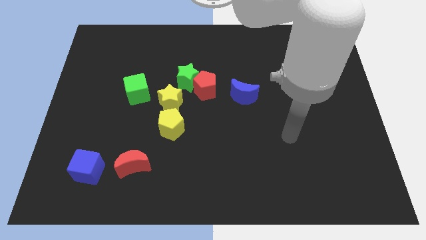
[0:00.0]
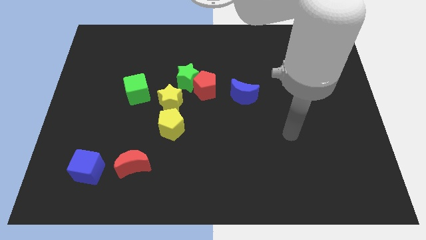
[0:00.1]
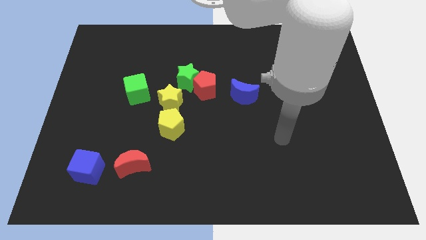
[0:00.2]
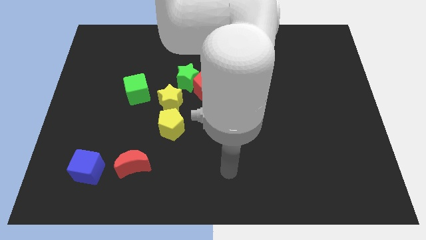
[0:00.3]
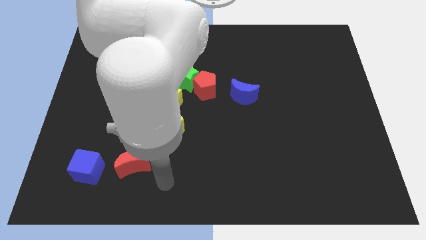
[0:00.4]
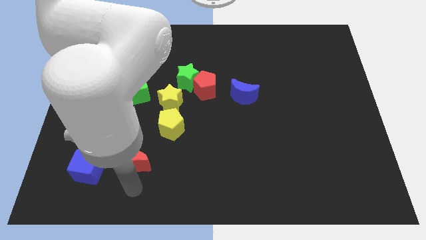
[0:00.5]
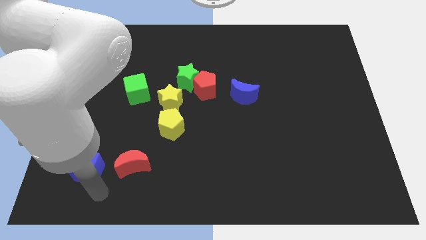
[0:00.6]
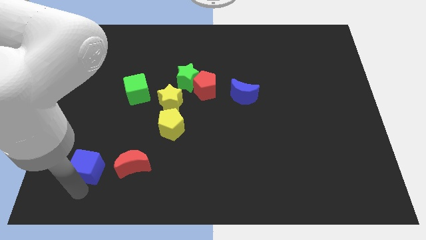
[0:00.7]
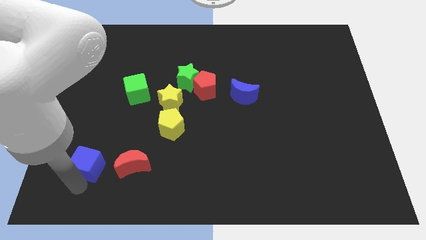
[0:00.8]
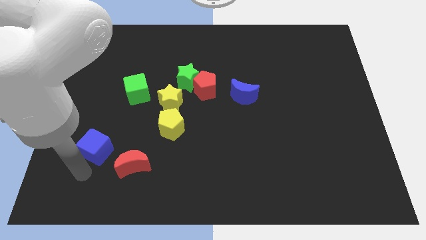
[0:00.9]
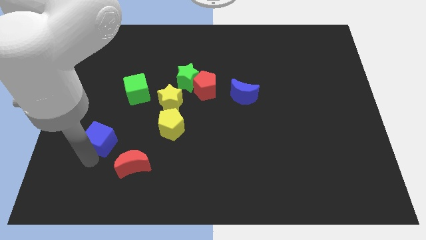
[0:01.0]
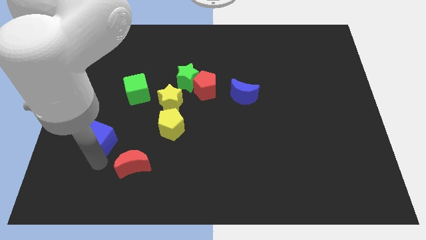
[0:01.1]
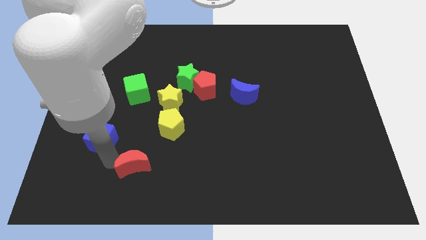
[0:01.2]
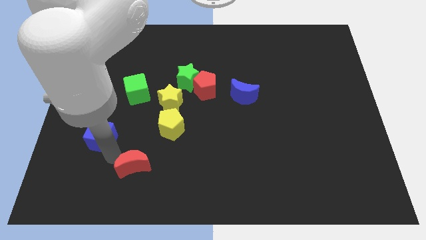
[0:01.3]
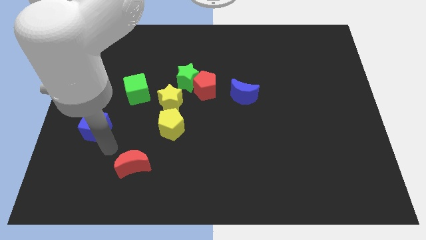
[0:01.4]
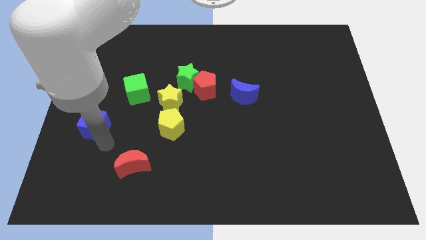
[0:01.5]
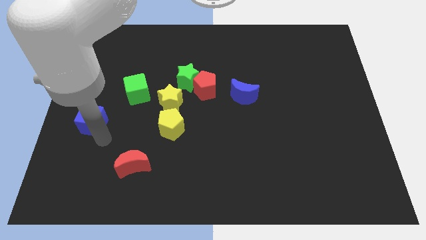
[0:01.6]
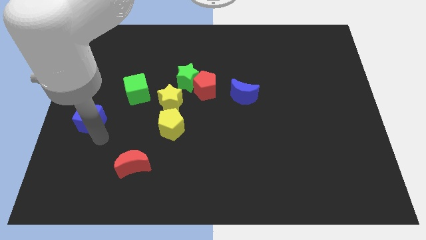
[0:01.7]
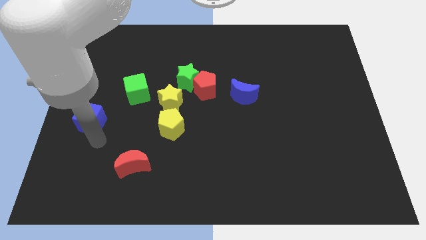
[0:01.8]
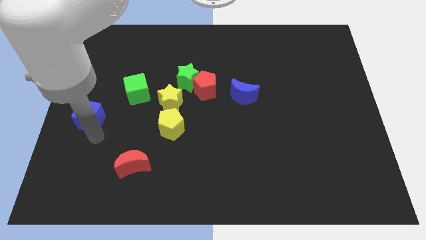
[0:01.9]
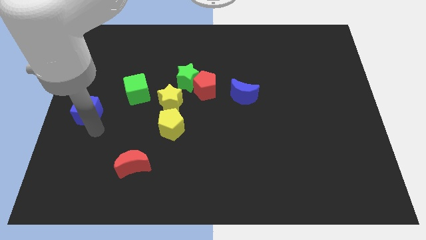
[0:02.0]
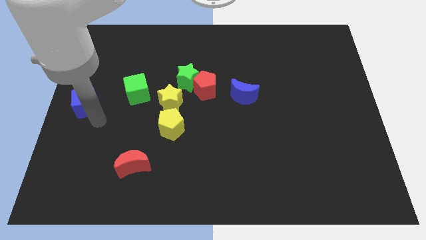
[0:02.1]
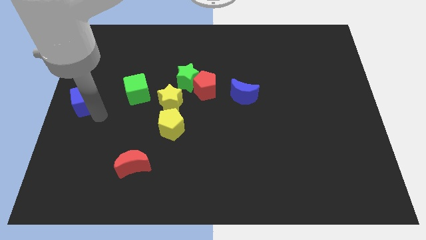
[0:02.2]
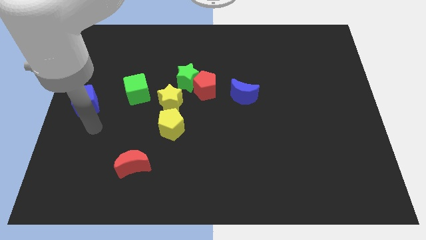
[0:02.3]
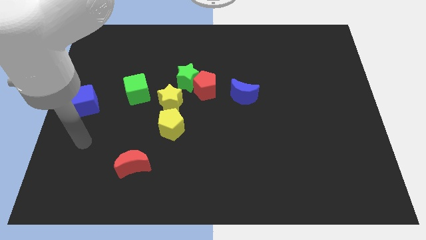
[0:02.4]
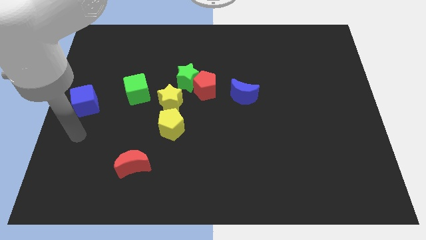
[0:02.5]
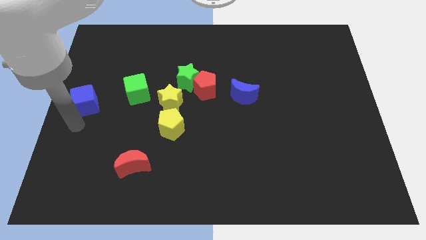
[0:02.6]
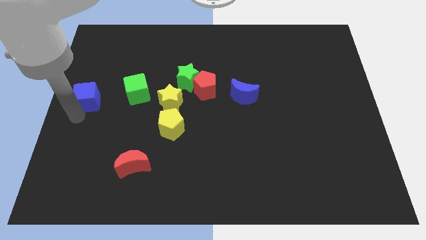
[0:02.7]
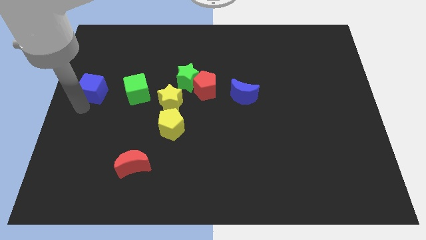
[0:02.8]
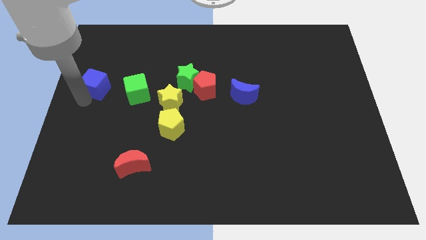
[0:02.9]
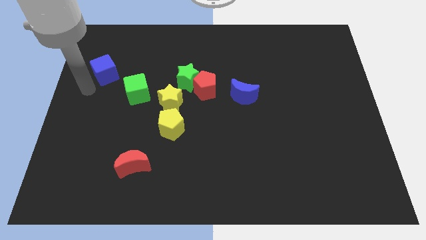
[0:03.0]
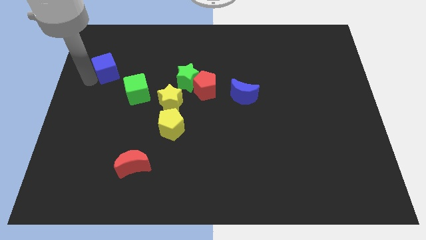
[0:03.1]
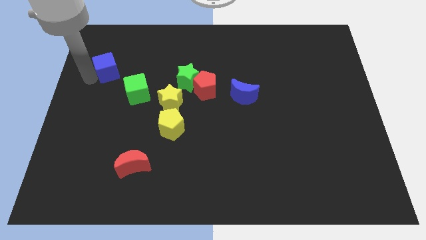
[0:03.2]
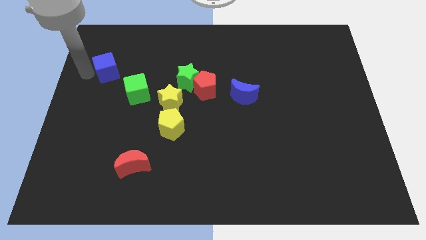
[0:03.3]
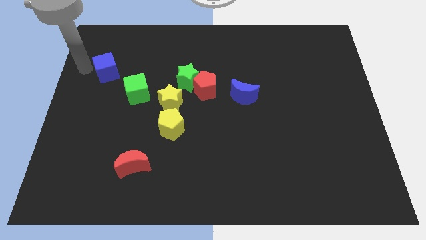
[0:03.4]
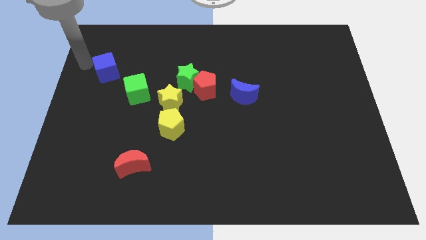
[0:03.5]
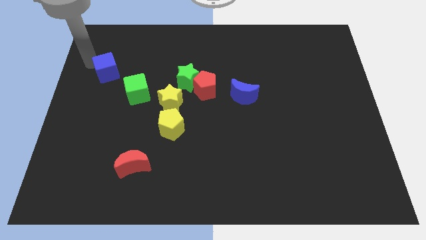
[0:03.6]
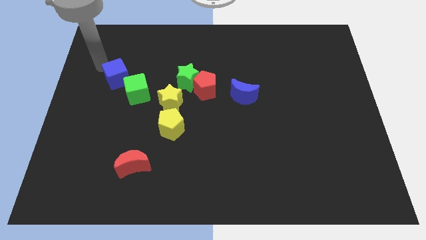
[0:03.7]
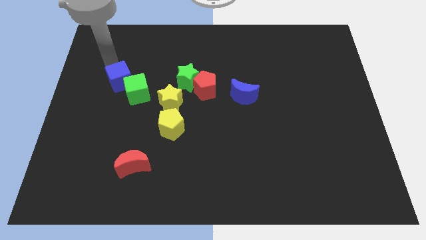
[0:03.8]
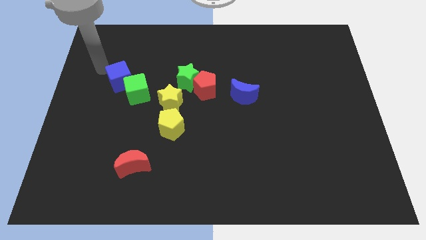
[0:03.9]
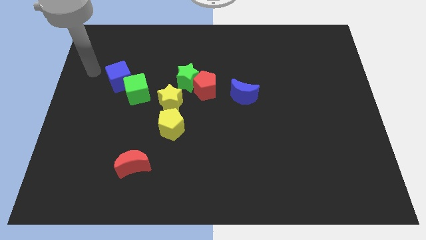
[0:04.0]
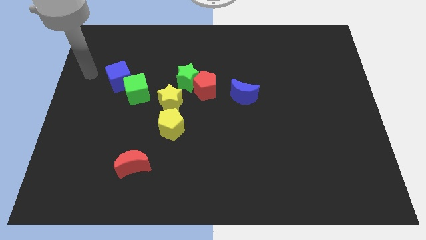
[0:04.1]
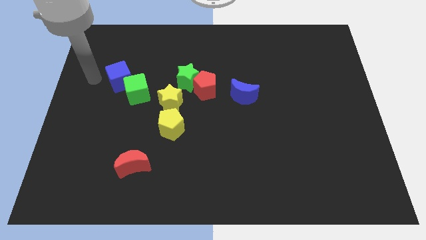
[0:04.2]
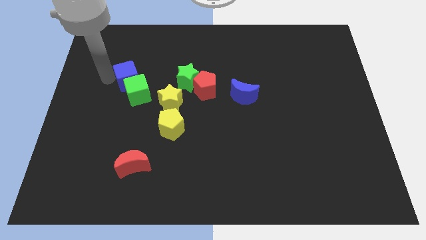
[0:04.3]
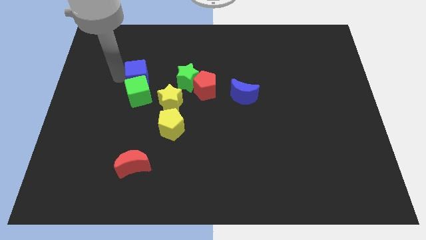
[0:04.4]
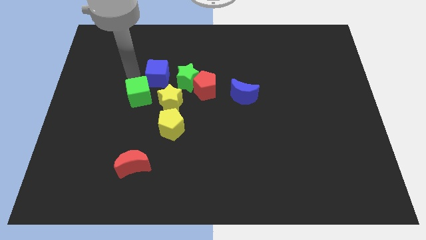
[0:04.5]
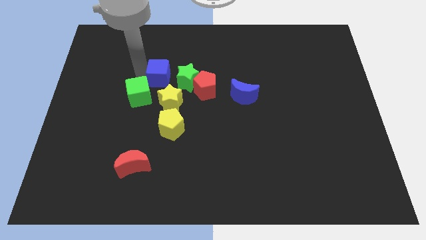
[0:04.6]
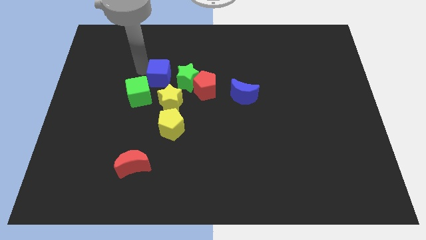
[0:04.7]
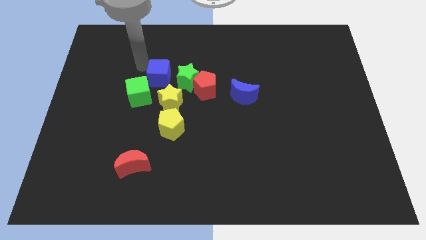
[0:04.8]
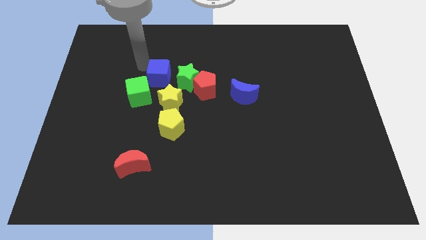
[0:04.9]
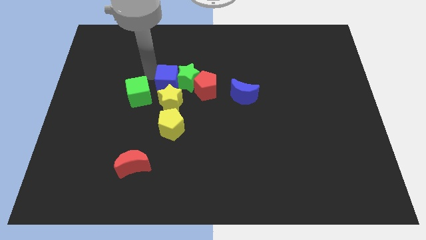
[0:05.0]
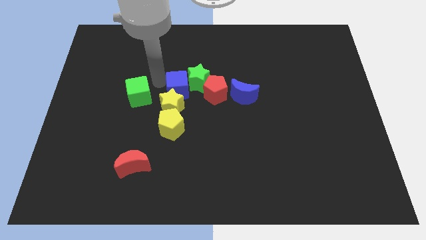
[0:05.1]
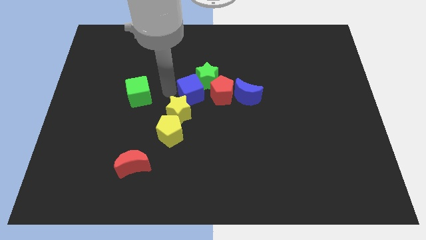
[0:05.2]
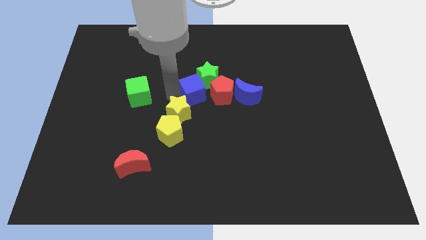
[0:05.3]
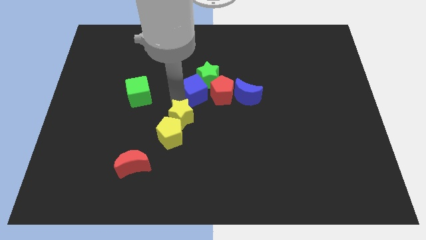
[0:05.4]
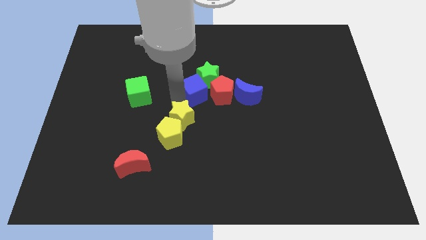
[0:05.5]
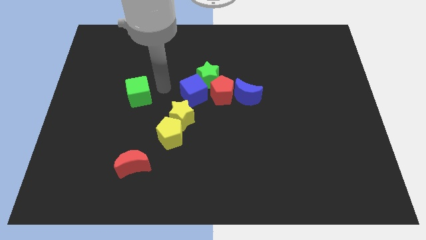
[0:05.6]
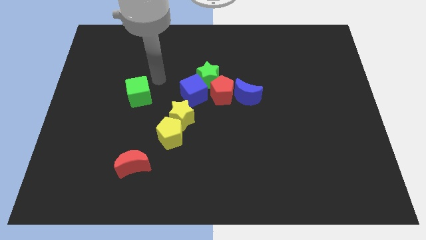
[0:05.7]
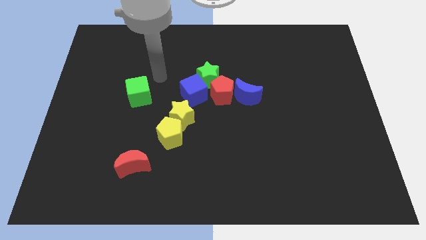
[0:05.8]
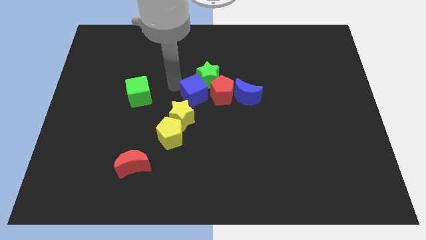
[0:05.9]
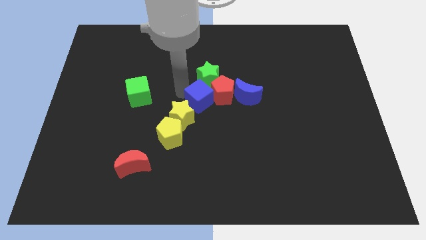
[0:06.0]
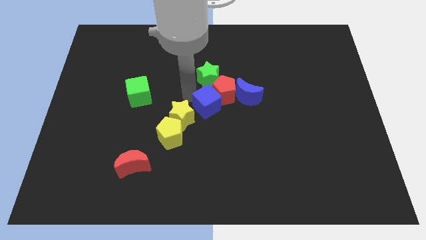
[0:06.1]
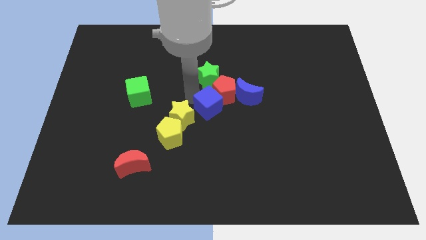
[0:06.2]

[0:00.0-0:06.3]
move the blue cube towards the red pentagon

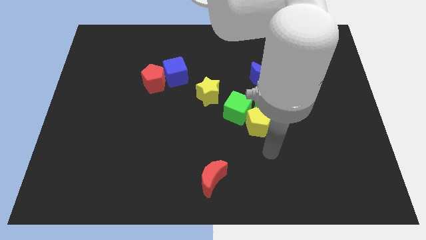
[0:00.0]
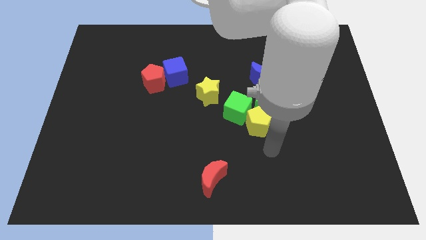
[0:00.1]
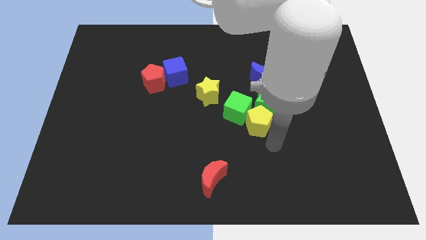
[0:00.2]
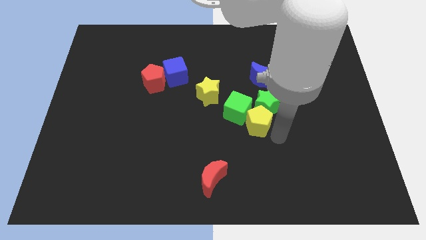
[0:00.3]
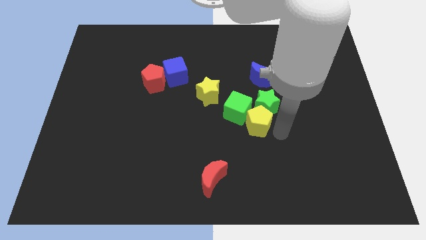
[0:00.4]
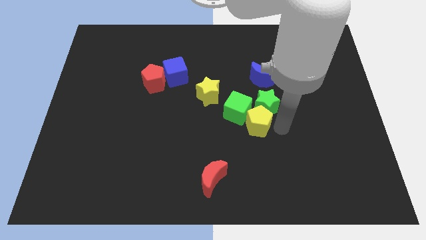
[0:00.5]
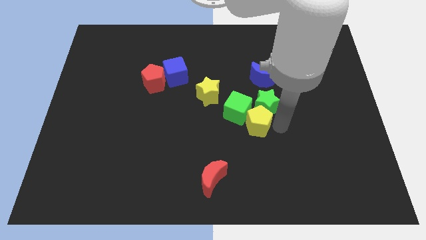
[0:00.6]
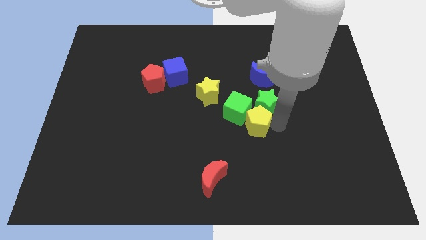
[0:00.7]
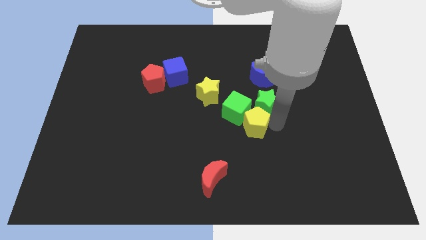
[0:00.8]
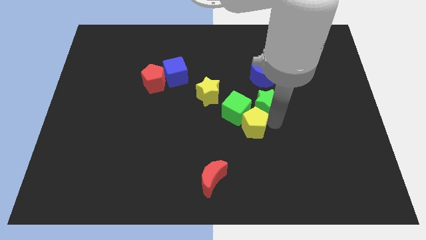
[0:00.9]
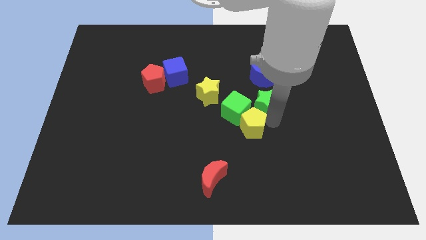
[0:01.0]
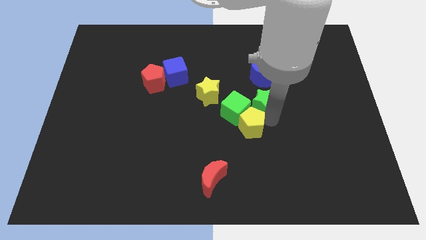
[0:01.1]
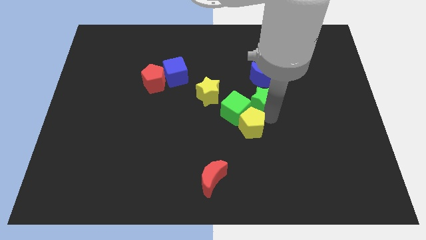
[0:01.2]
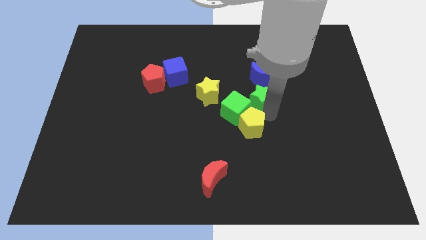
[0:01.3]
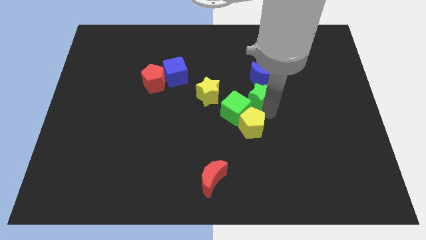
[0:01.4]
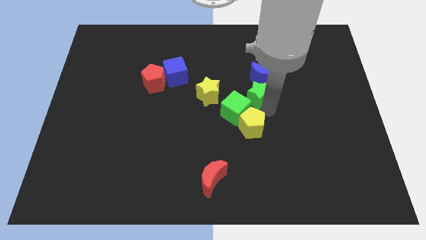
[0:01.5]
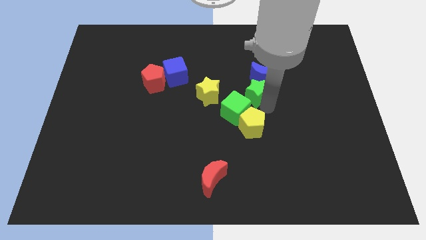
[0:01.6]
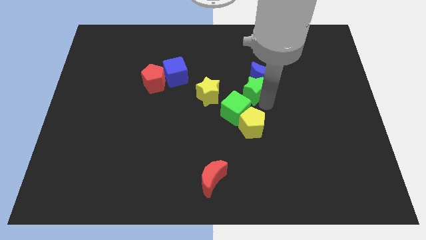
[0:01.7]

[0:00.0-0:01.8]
put the green star towards the blue moon

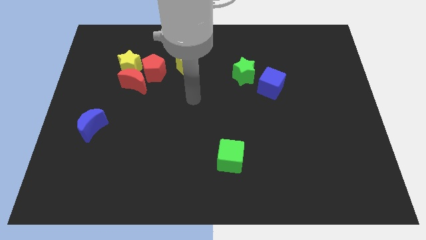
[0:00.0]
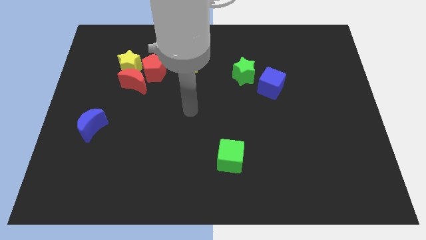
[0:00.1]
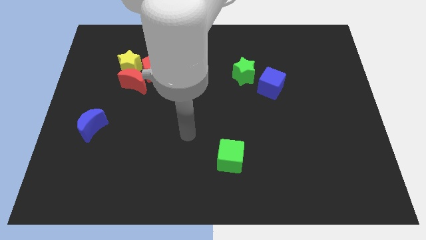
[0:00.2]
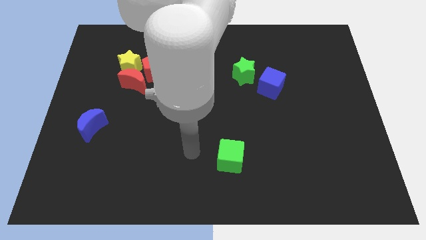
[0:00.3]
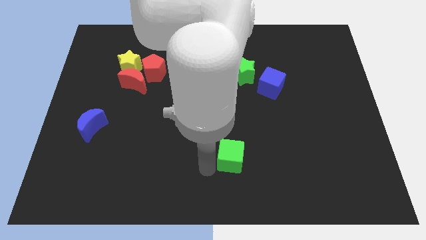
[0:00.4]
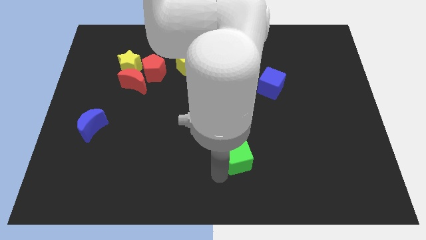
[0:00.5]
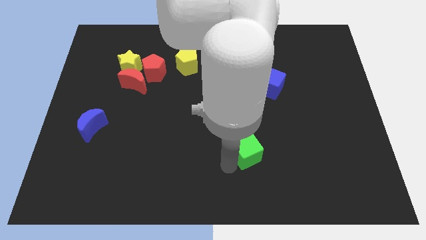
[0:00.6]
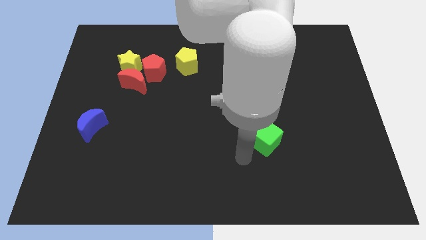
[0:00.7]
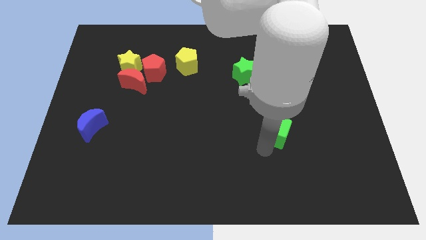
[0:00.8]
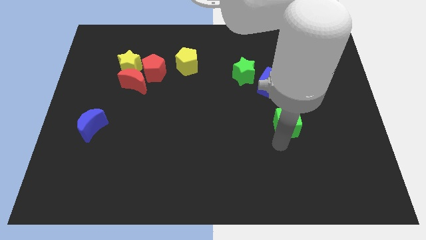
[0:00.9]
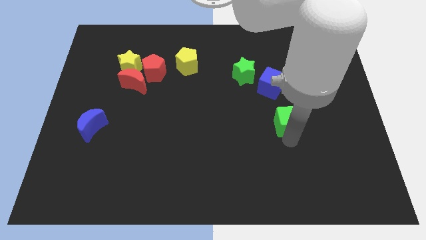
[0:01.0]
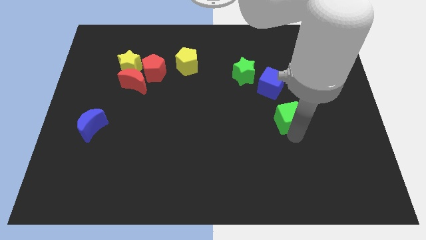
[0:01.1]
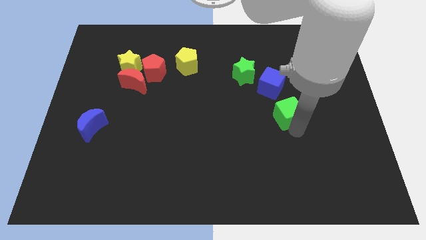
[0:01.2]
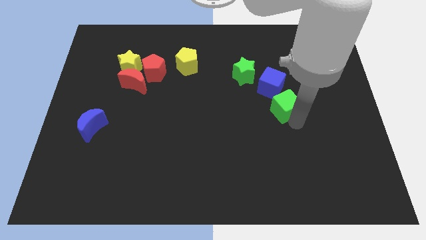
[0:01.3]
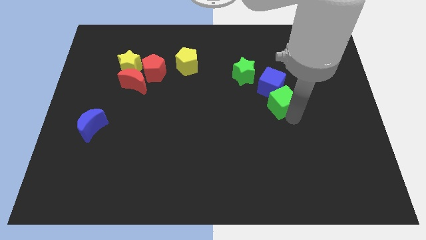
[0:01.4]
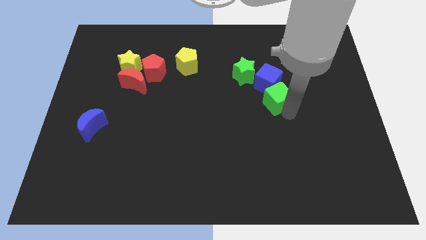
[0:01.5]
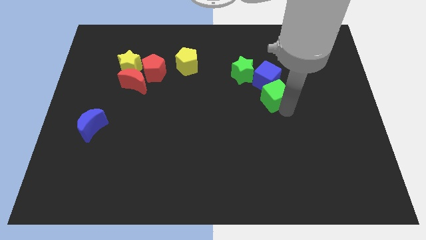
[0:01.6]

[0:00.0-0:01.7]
push the green cube to the blue cube
